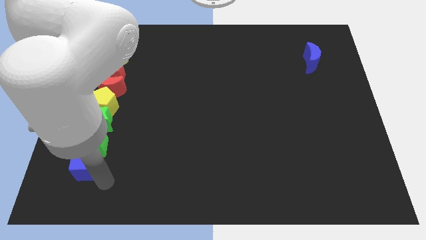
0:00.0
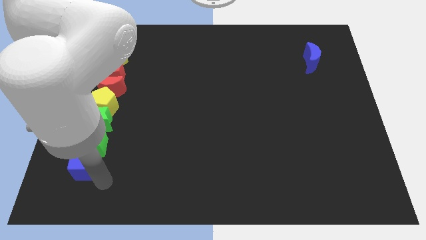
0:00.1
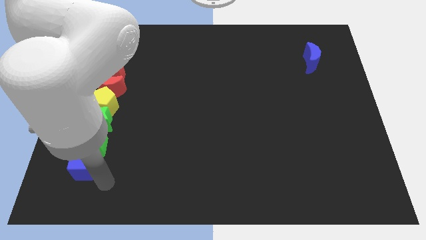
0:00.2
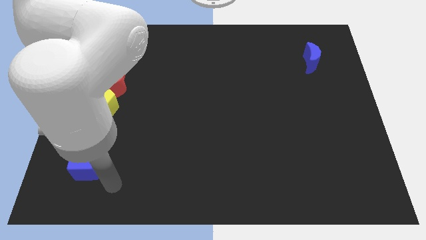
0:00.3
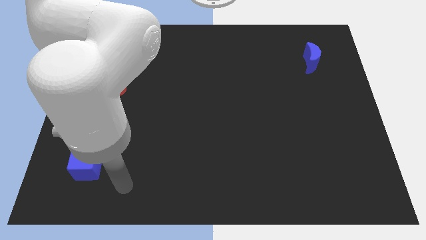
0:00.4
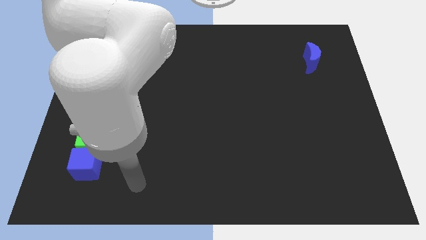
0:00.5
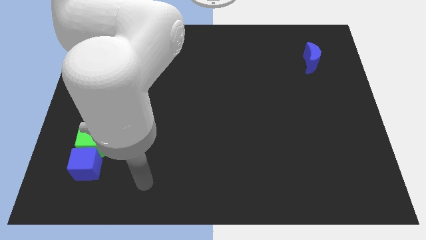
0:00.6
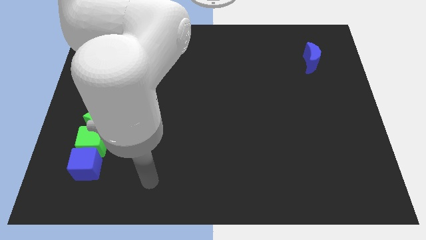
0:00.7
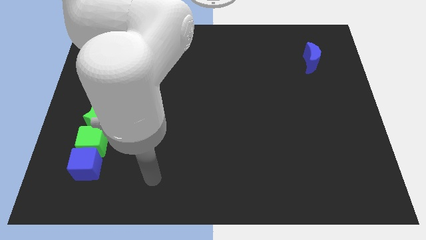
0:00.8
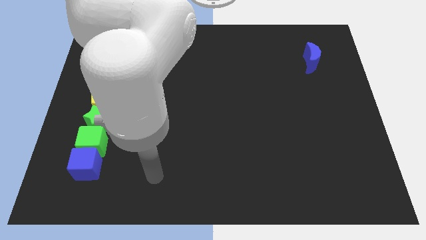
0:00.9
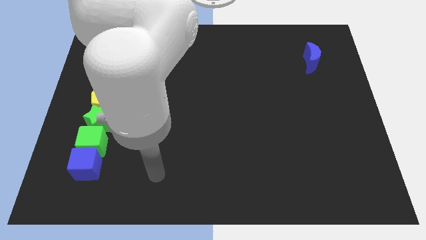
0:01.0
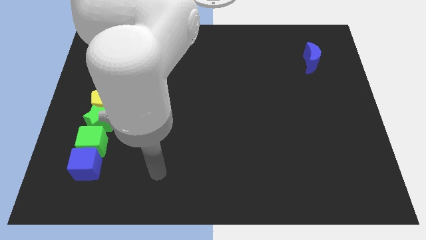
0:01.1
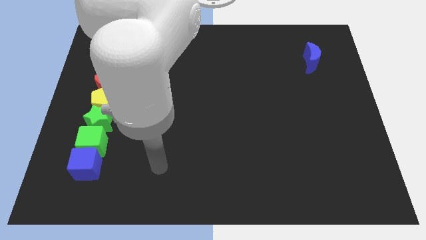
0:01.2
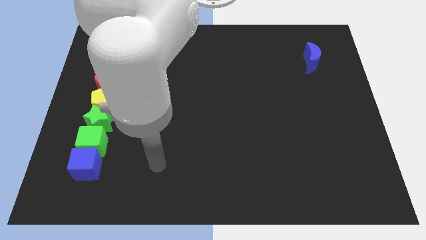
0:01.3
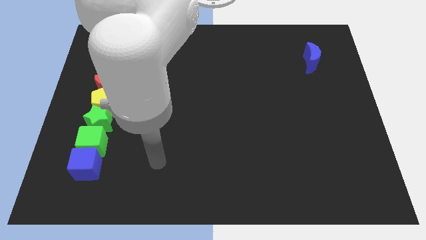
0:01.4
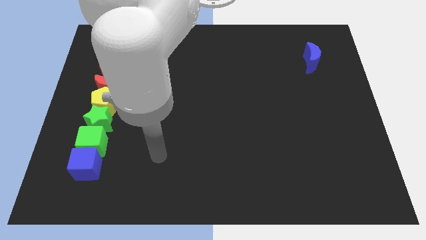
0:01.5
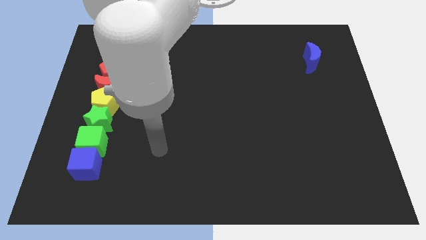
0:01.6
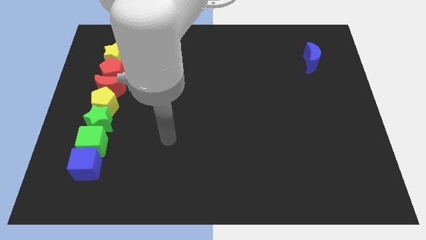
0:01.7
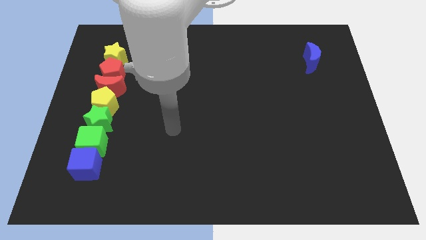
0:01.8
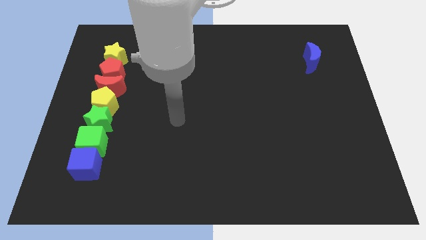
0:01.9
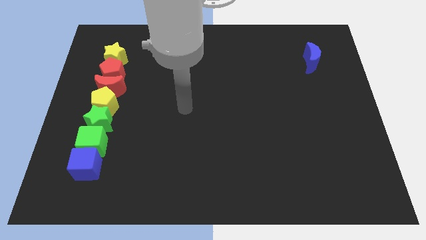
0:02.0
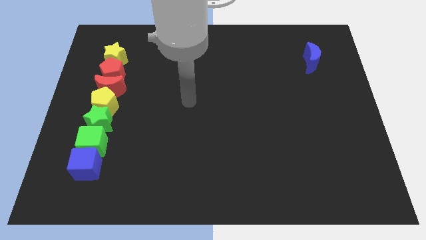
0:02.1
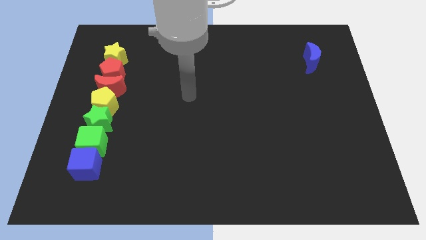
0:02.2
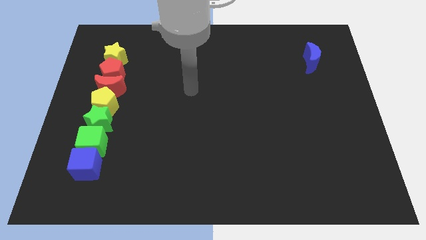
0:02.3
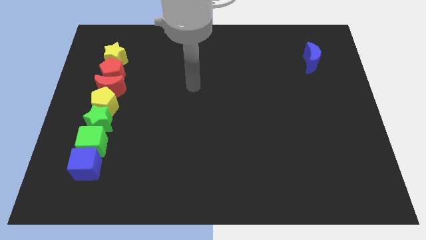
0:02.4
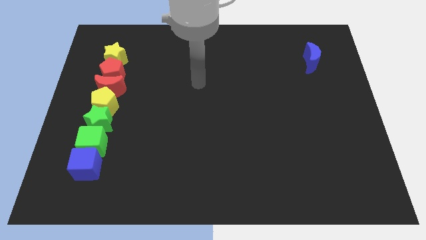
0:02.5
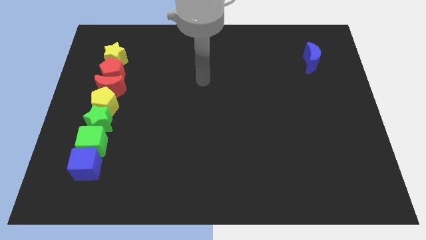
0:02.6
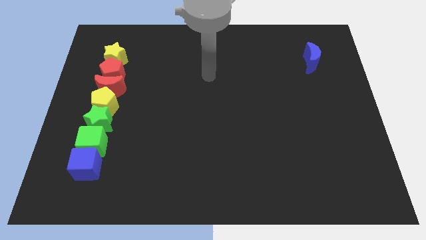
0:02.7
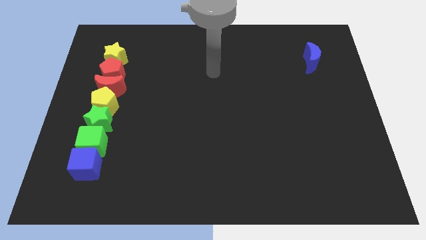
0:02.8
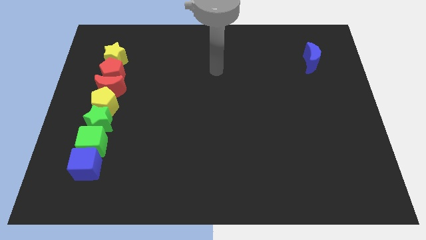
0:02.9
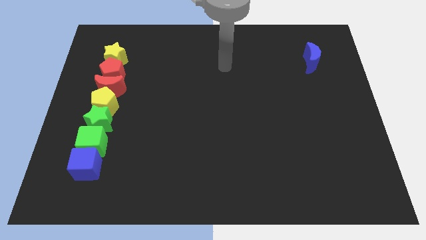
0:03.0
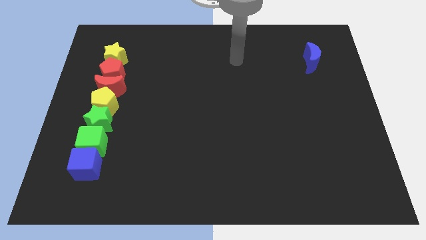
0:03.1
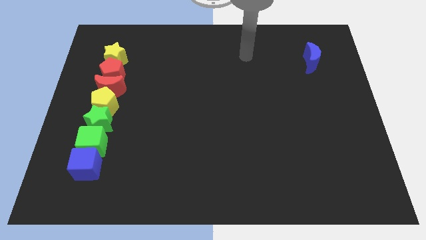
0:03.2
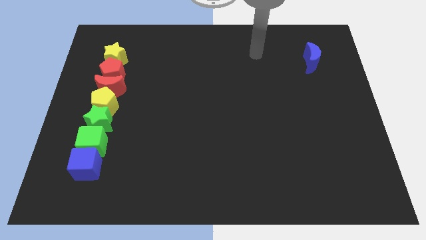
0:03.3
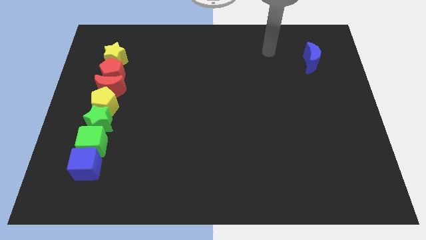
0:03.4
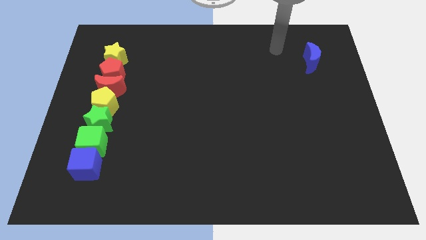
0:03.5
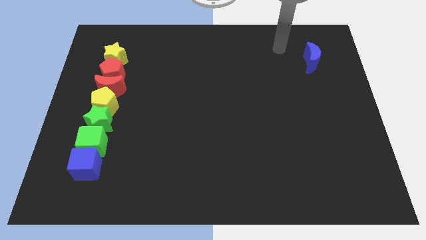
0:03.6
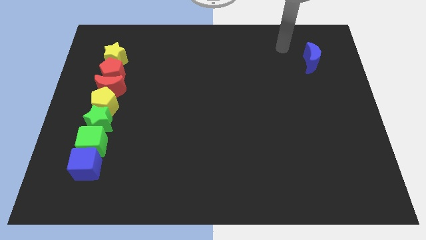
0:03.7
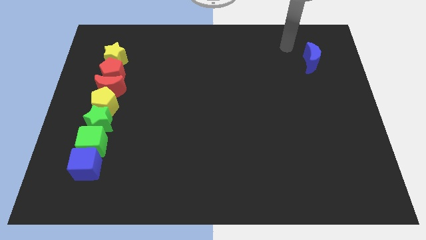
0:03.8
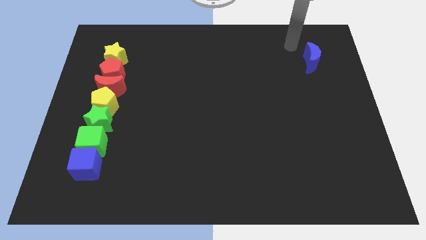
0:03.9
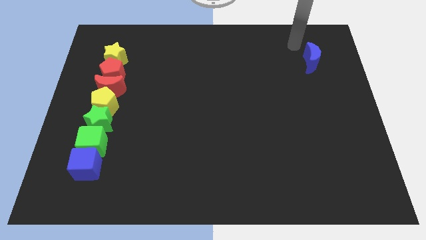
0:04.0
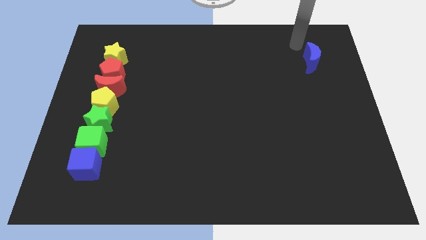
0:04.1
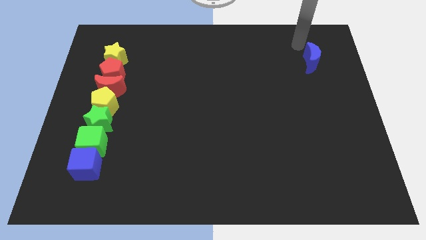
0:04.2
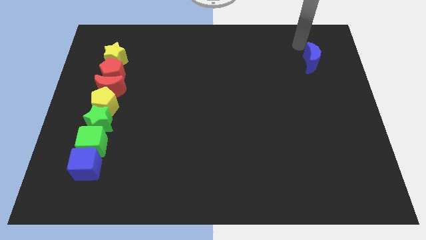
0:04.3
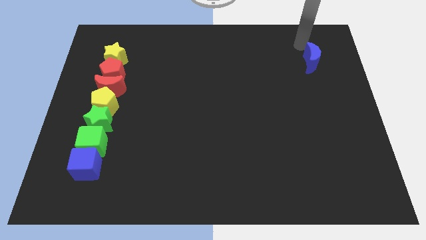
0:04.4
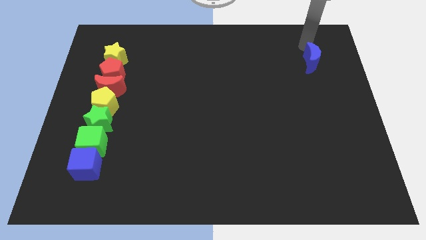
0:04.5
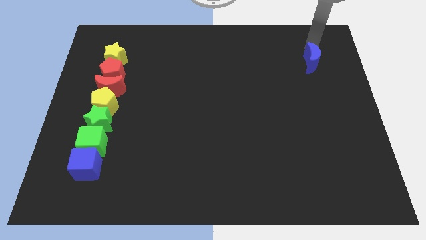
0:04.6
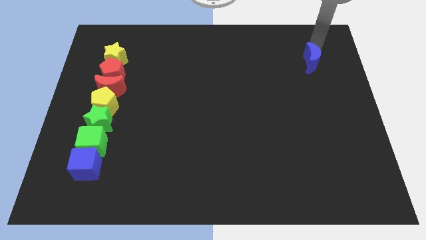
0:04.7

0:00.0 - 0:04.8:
move your arm away from the blue cube

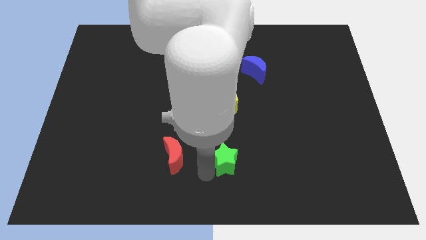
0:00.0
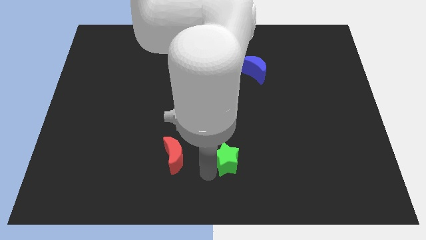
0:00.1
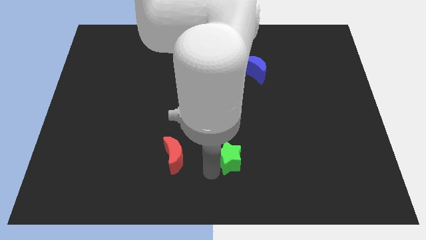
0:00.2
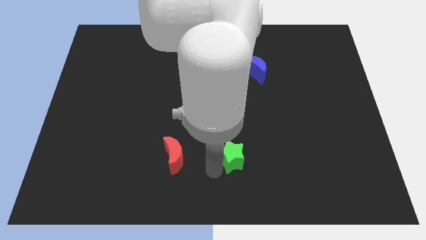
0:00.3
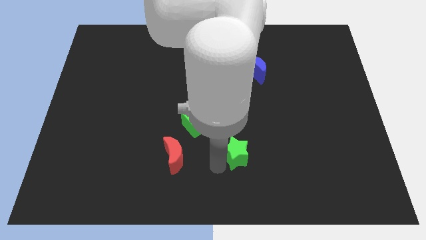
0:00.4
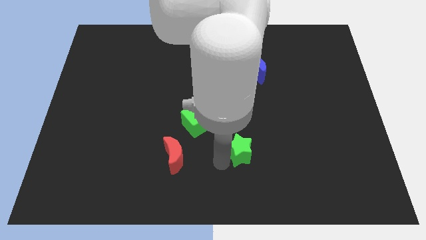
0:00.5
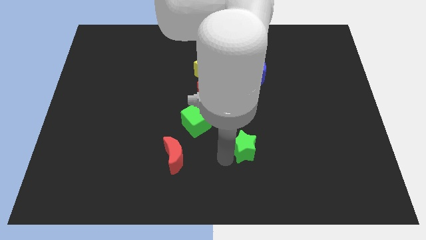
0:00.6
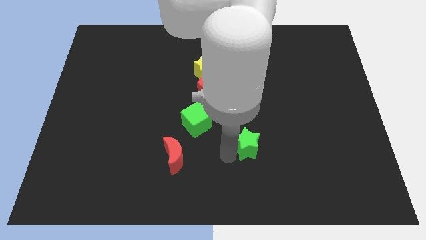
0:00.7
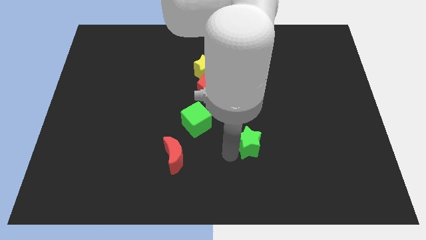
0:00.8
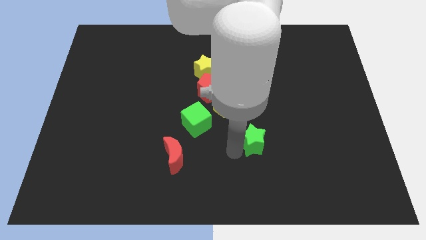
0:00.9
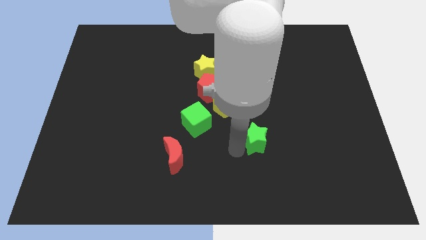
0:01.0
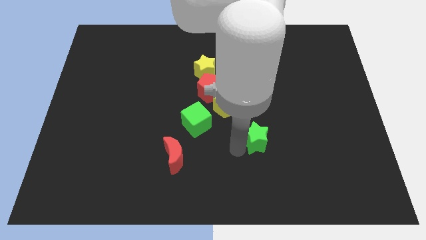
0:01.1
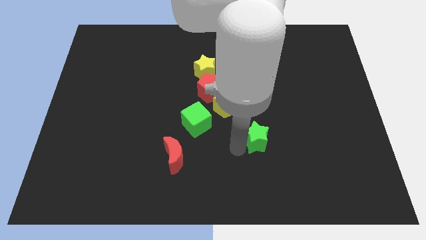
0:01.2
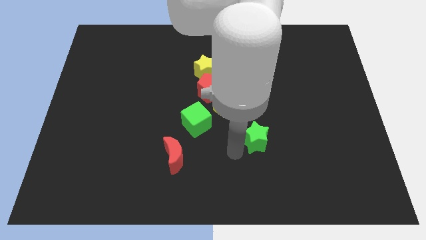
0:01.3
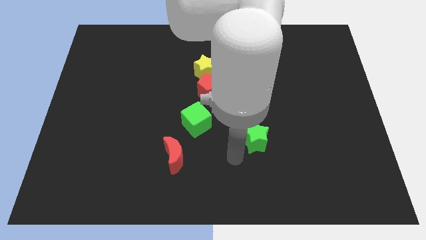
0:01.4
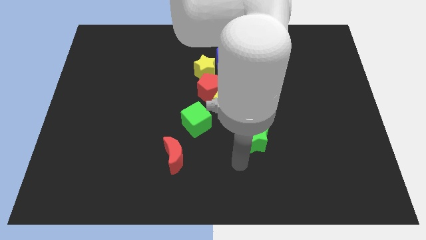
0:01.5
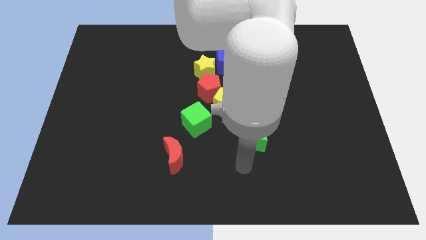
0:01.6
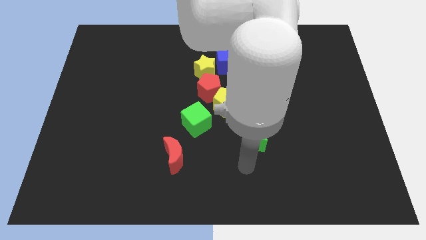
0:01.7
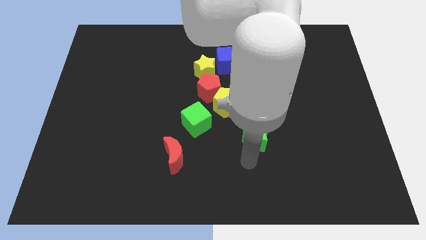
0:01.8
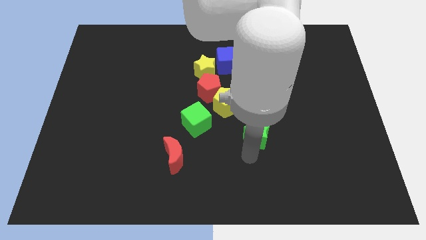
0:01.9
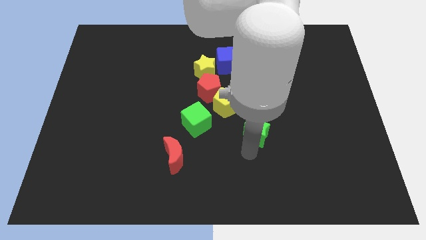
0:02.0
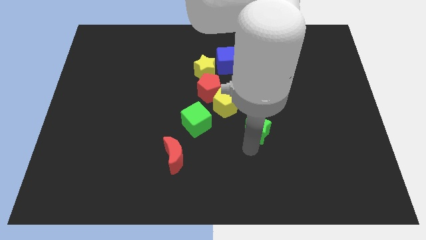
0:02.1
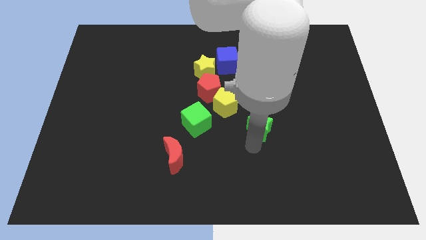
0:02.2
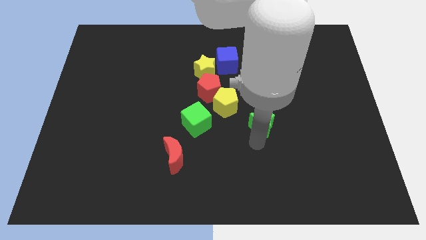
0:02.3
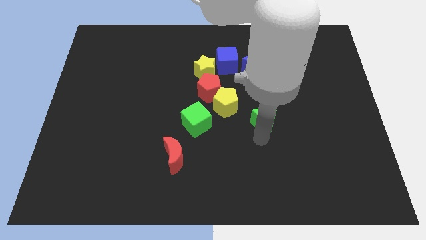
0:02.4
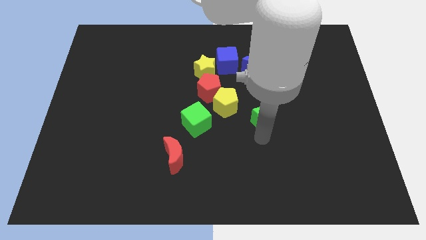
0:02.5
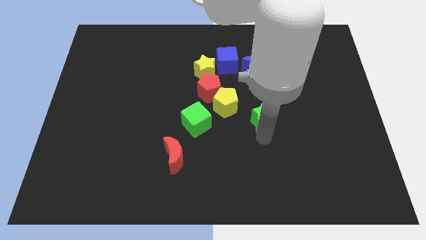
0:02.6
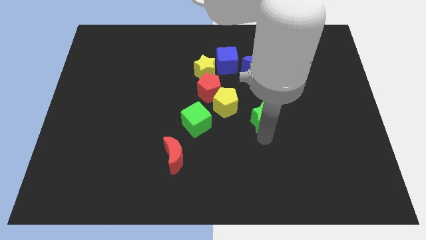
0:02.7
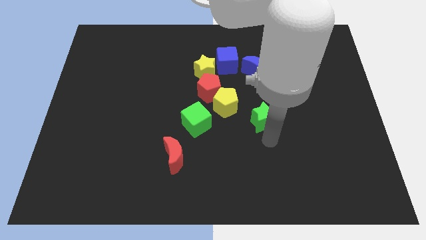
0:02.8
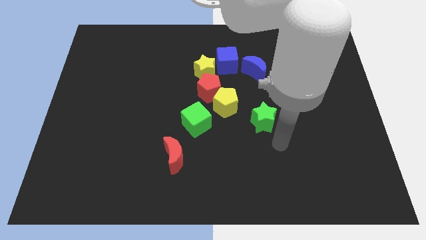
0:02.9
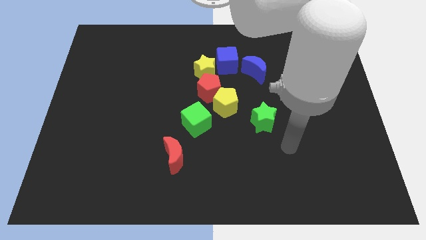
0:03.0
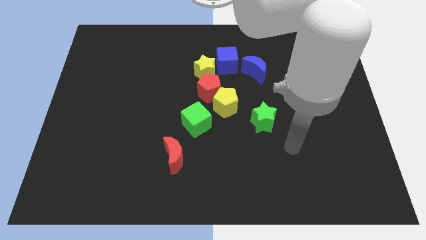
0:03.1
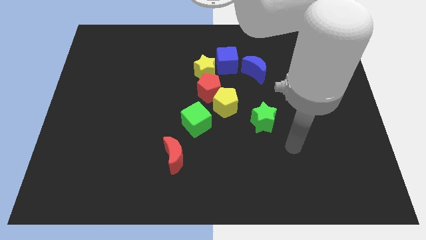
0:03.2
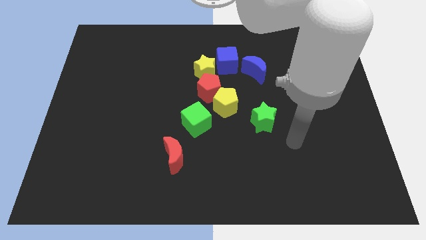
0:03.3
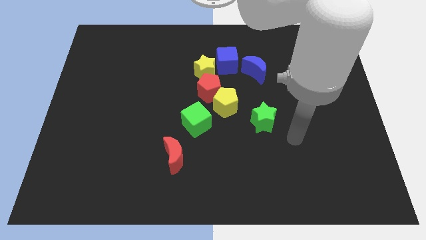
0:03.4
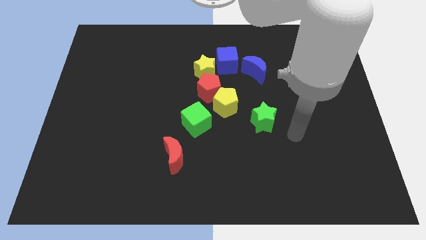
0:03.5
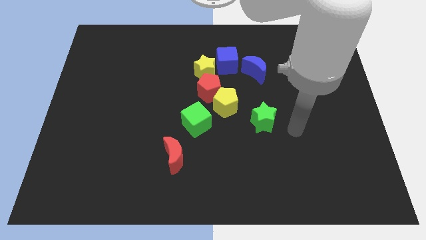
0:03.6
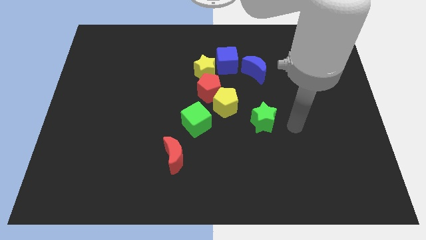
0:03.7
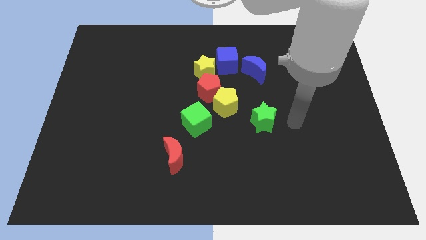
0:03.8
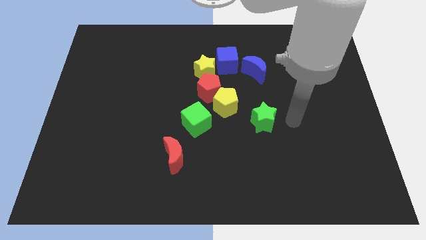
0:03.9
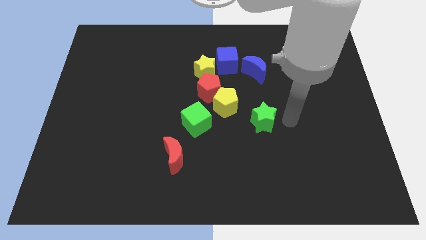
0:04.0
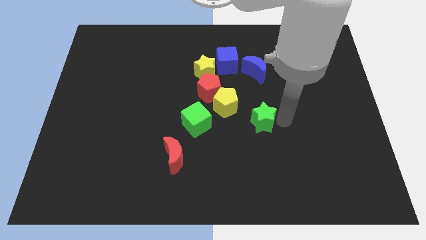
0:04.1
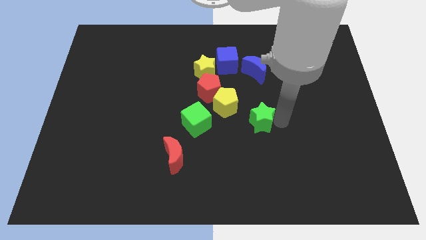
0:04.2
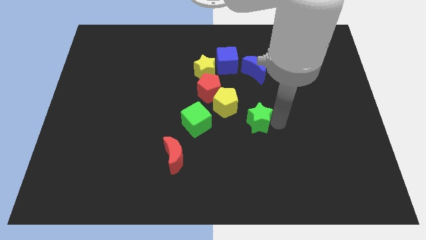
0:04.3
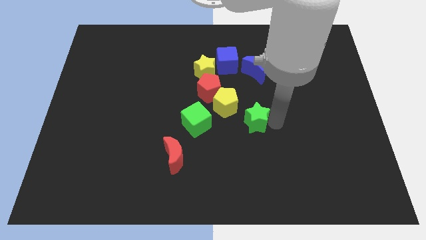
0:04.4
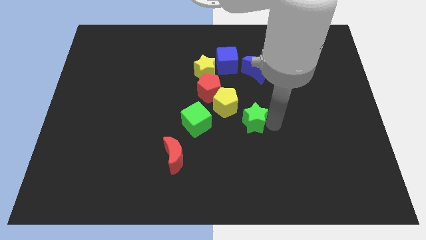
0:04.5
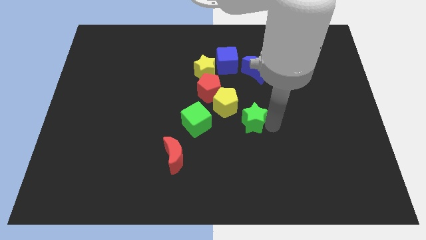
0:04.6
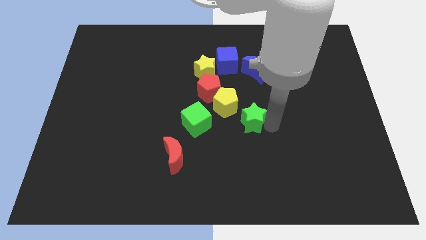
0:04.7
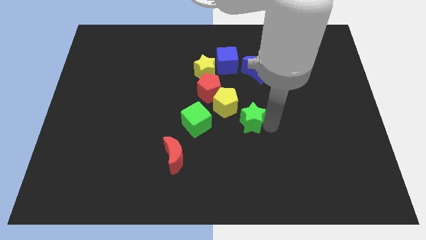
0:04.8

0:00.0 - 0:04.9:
push the green star to the right of the yellow pentagon
